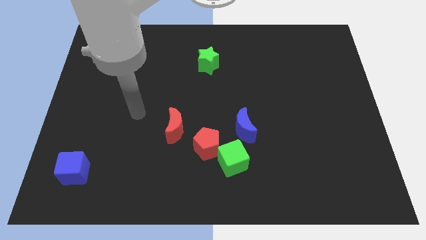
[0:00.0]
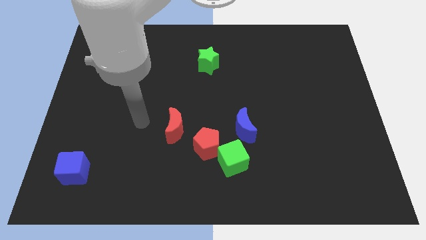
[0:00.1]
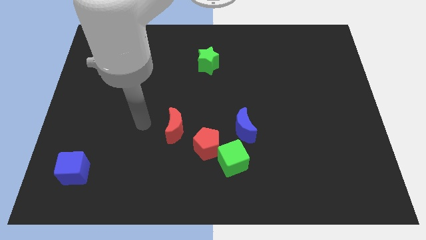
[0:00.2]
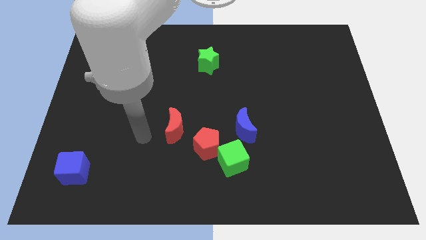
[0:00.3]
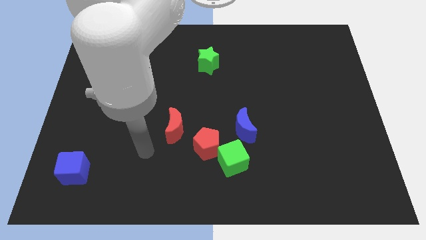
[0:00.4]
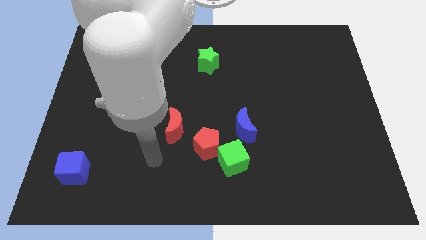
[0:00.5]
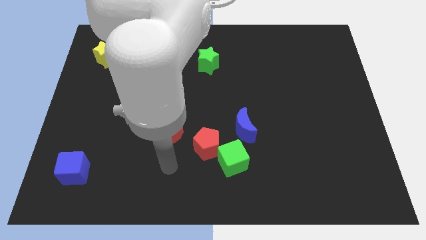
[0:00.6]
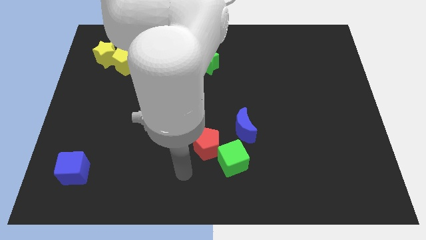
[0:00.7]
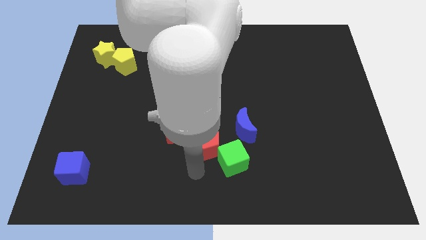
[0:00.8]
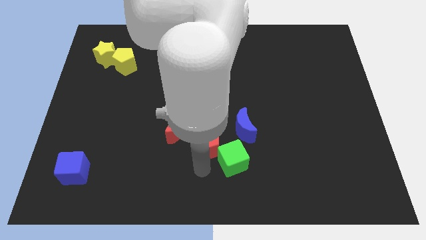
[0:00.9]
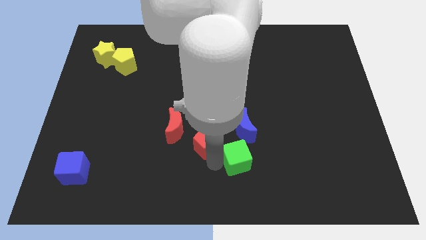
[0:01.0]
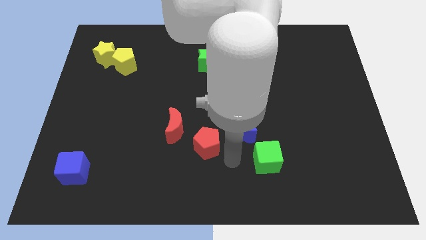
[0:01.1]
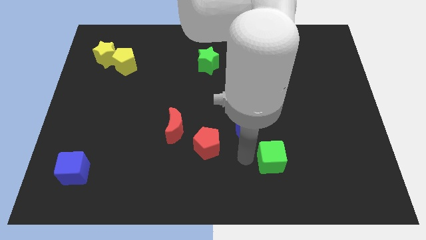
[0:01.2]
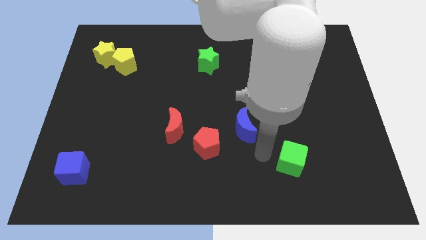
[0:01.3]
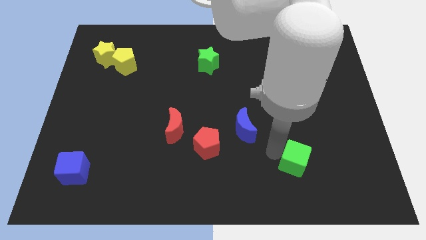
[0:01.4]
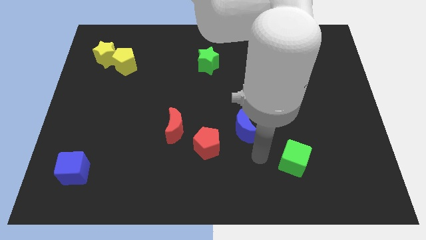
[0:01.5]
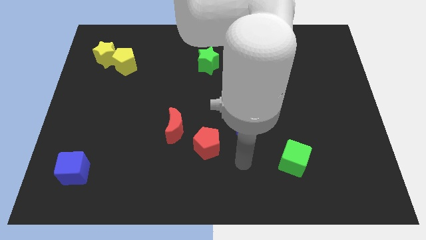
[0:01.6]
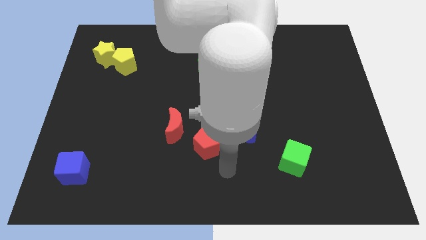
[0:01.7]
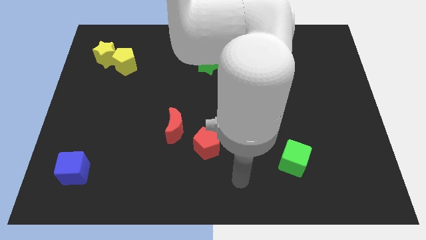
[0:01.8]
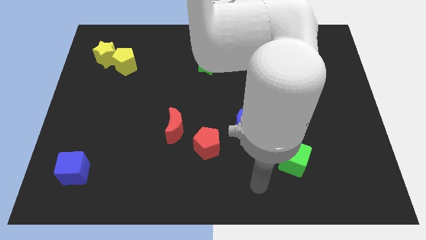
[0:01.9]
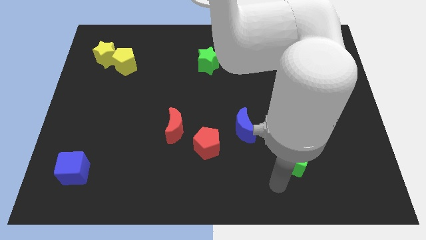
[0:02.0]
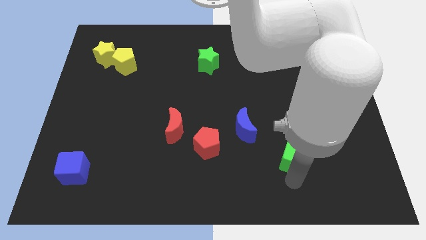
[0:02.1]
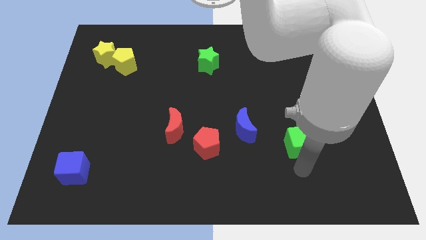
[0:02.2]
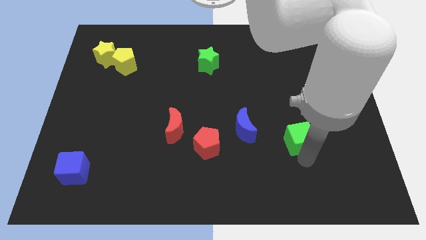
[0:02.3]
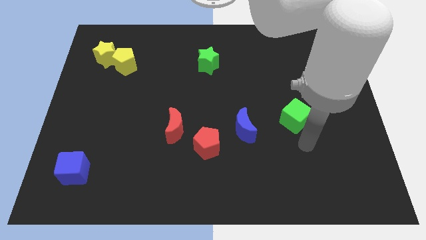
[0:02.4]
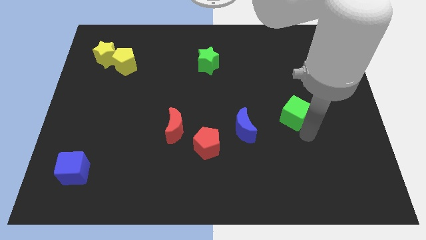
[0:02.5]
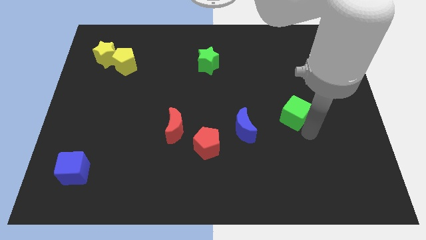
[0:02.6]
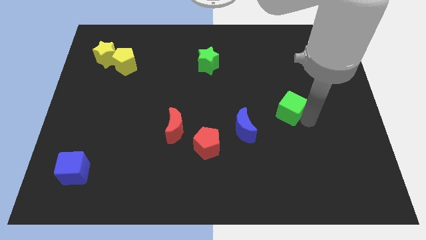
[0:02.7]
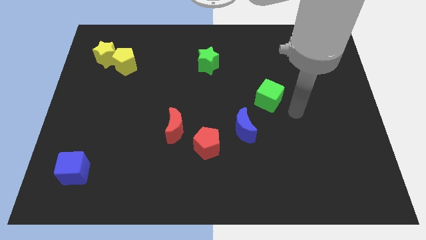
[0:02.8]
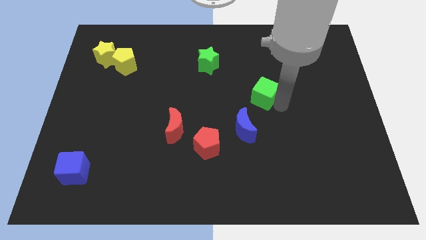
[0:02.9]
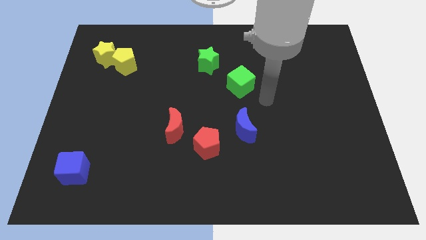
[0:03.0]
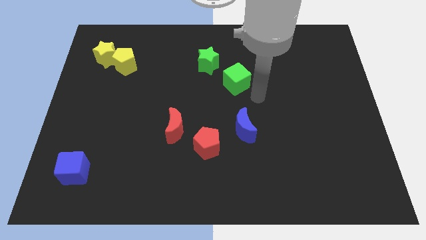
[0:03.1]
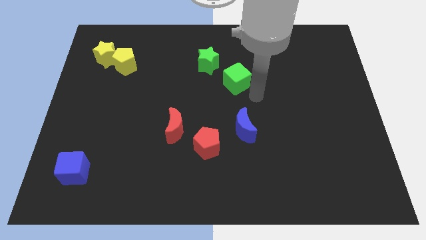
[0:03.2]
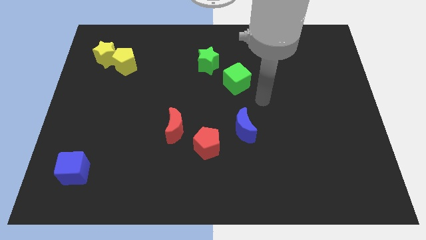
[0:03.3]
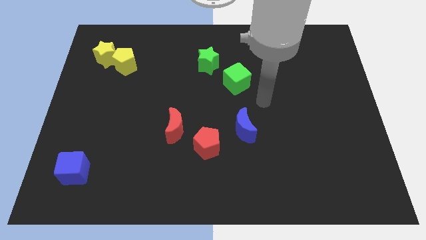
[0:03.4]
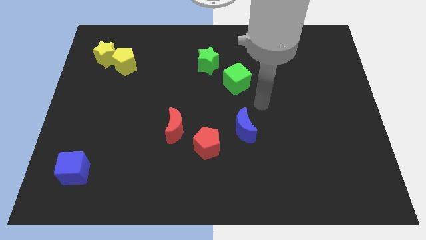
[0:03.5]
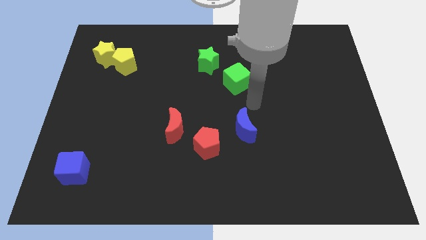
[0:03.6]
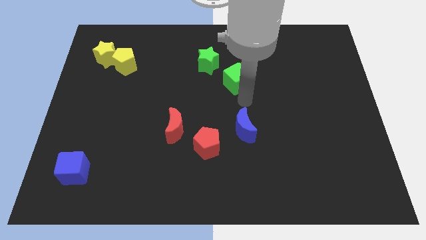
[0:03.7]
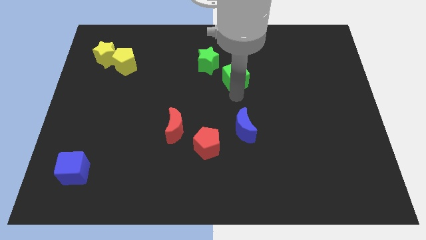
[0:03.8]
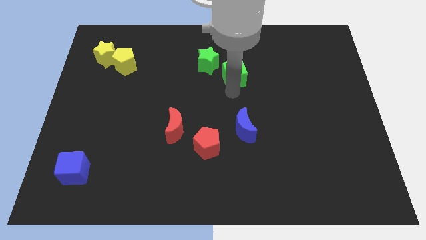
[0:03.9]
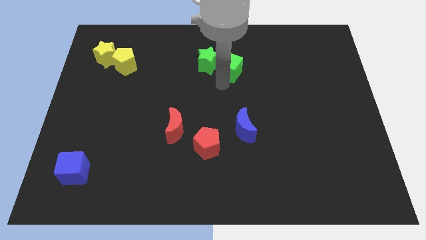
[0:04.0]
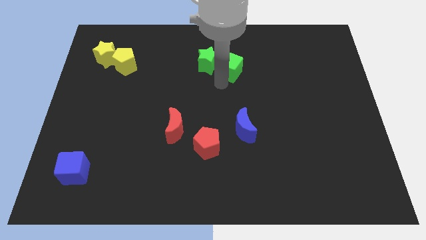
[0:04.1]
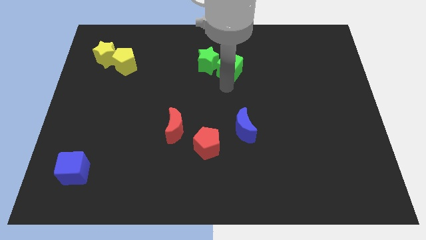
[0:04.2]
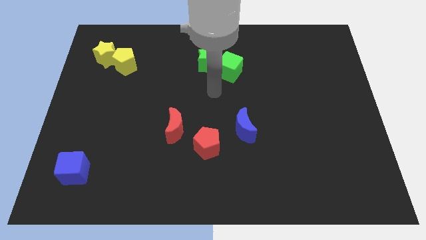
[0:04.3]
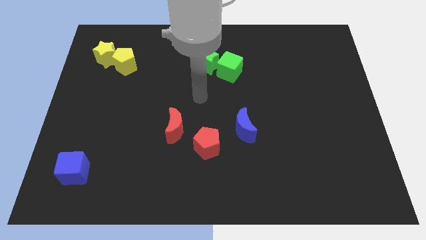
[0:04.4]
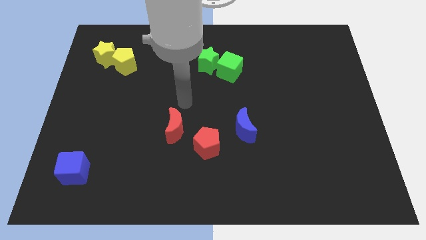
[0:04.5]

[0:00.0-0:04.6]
place the green cube to the right side of the green star

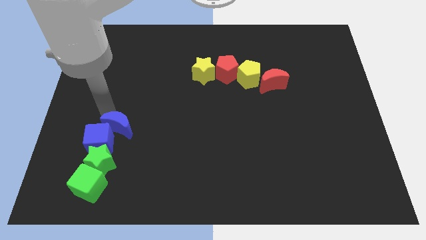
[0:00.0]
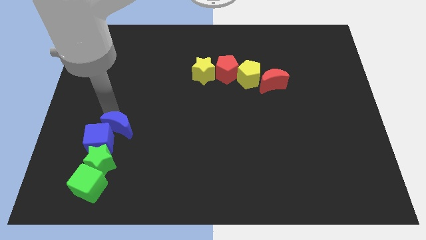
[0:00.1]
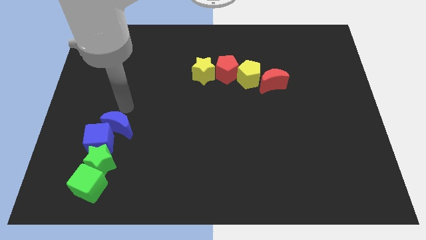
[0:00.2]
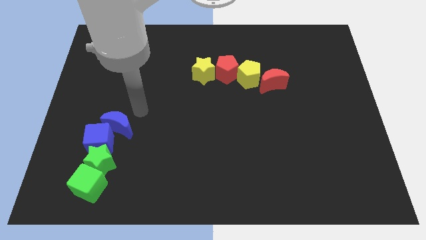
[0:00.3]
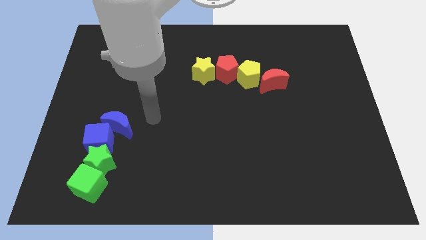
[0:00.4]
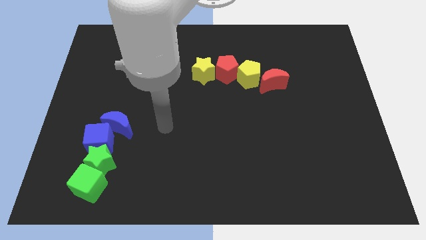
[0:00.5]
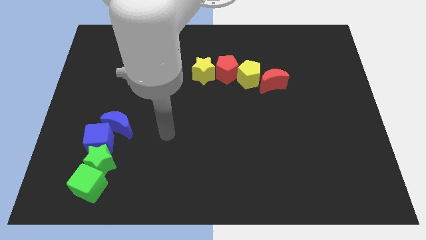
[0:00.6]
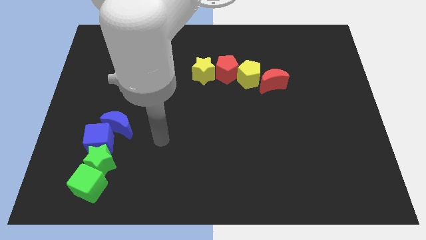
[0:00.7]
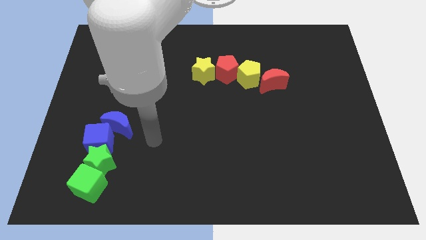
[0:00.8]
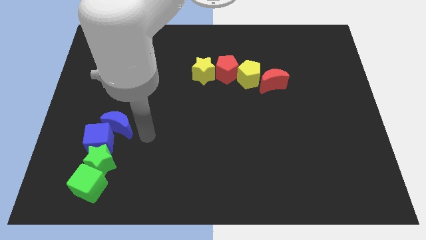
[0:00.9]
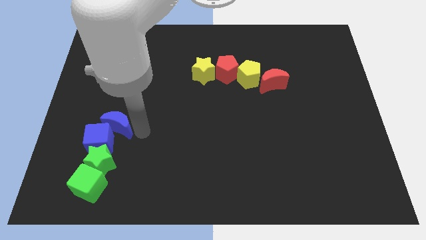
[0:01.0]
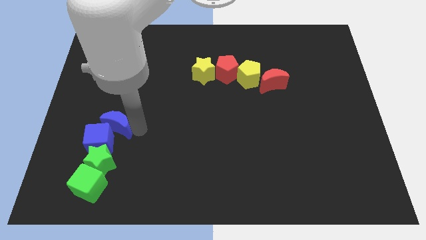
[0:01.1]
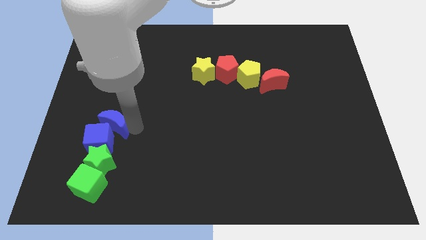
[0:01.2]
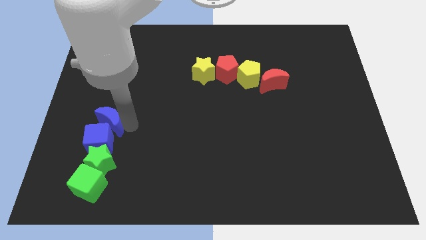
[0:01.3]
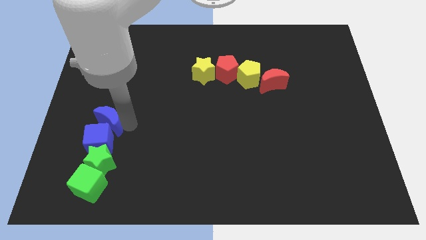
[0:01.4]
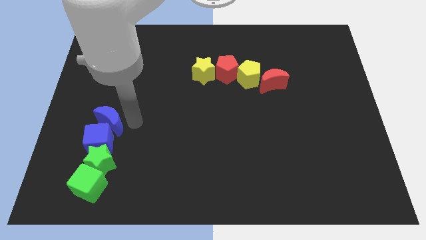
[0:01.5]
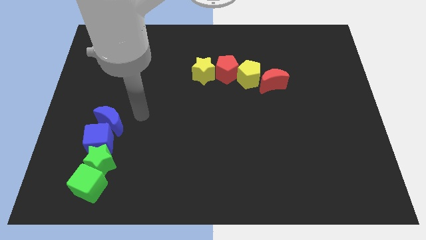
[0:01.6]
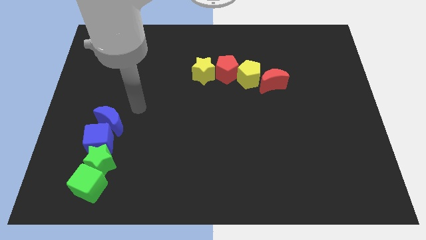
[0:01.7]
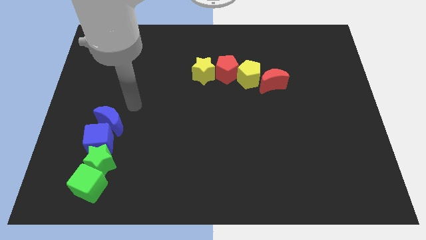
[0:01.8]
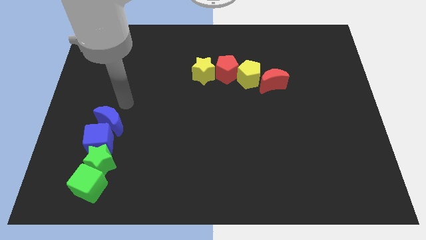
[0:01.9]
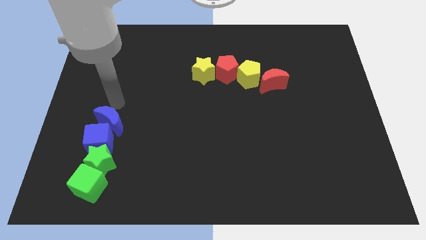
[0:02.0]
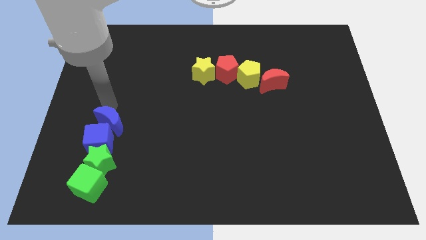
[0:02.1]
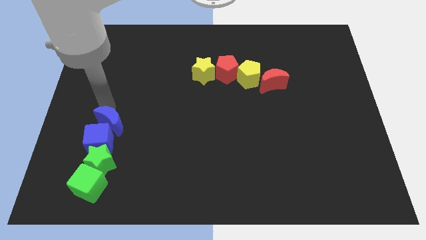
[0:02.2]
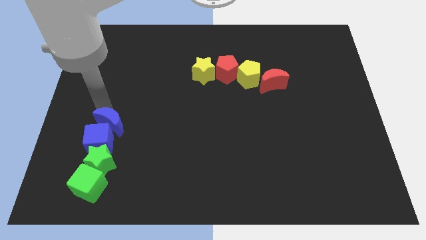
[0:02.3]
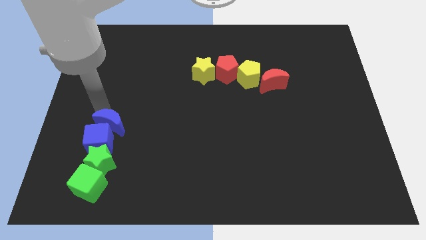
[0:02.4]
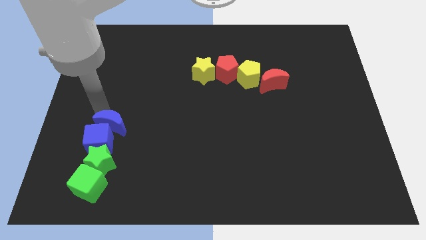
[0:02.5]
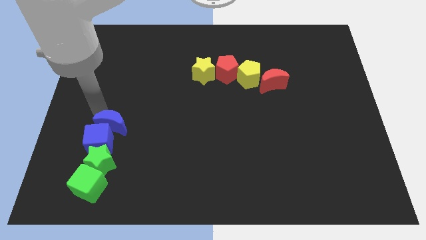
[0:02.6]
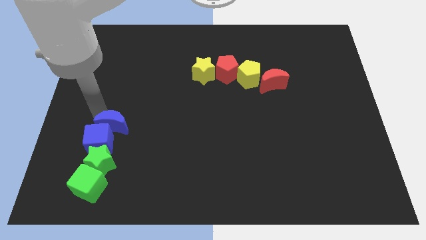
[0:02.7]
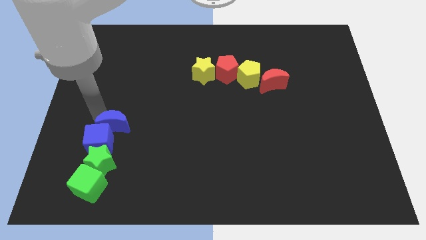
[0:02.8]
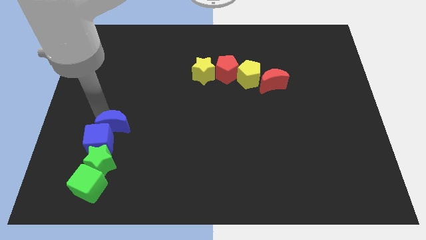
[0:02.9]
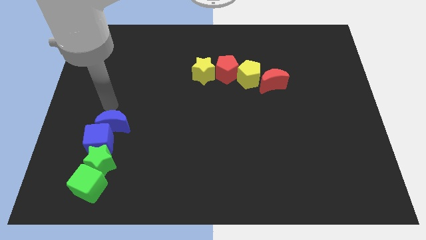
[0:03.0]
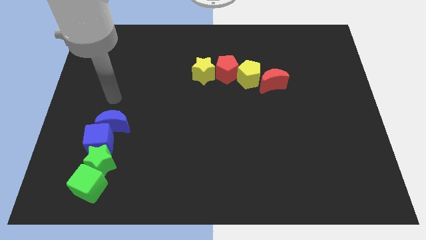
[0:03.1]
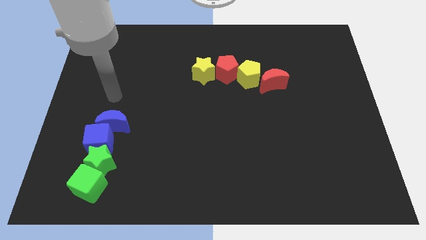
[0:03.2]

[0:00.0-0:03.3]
slightly drag the blue crescent towards the blue cube

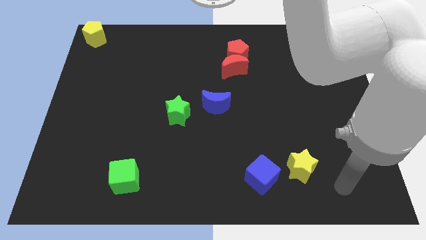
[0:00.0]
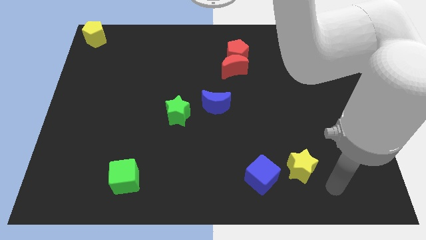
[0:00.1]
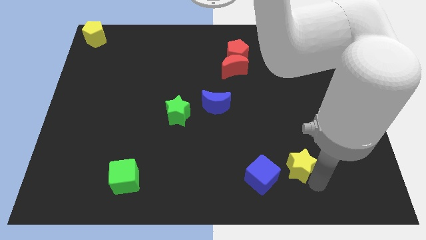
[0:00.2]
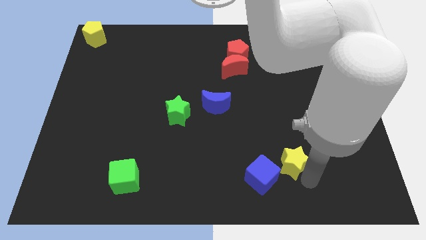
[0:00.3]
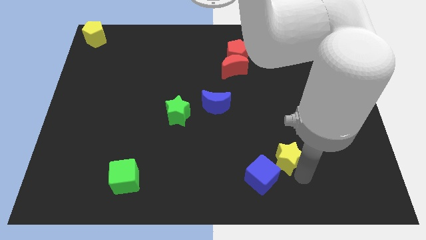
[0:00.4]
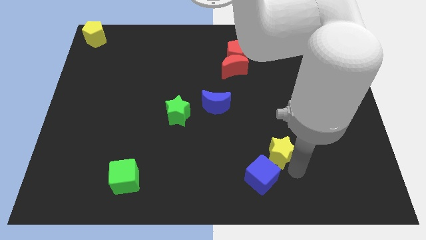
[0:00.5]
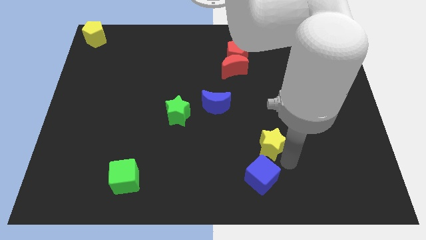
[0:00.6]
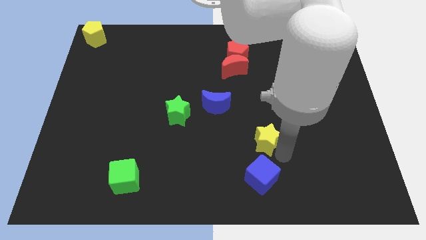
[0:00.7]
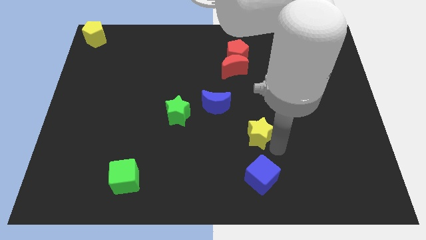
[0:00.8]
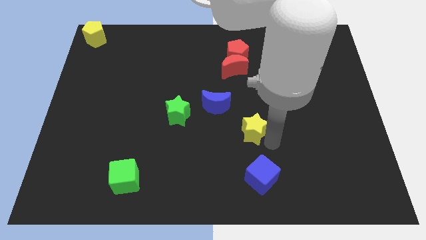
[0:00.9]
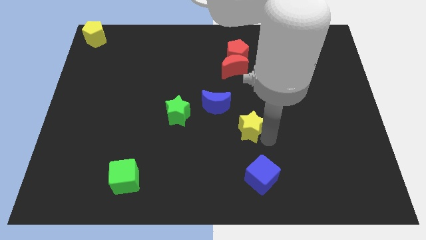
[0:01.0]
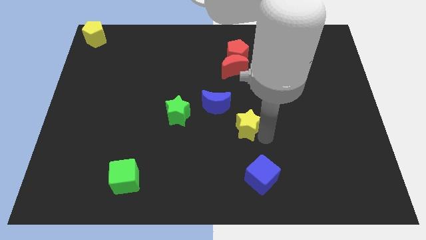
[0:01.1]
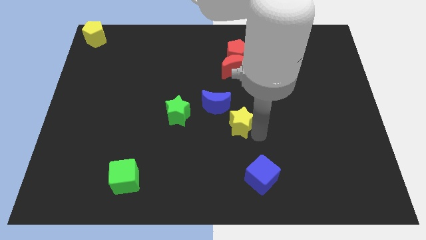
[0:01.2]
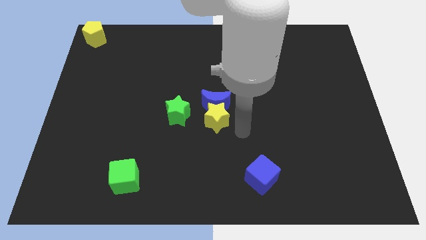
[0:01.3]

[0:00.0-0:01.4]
push the yellow star above the blue cube
